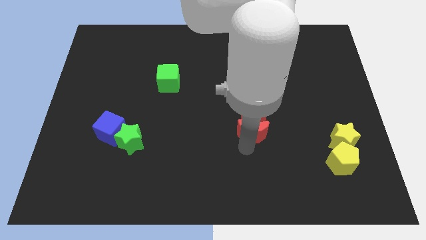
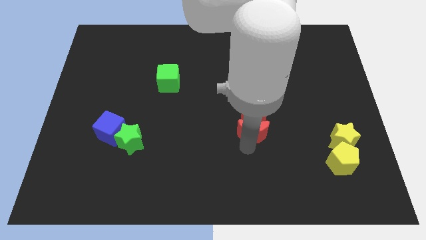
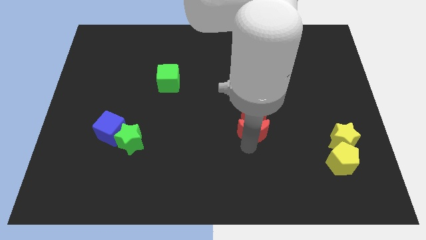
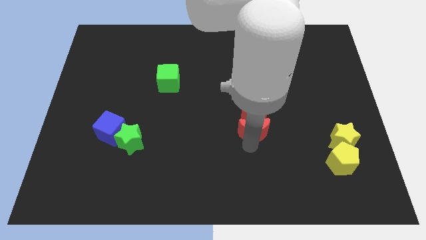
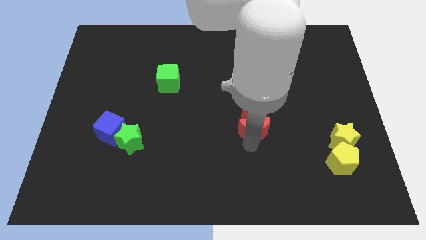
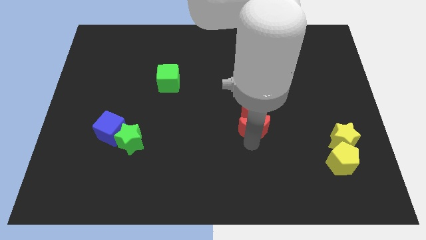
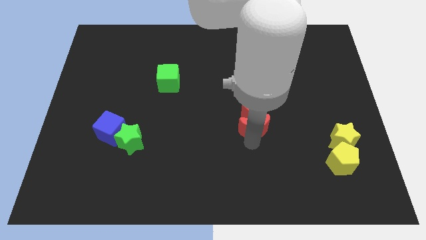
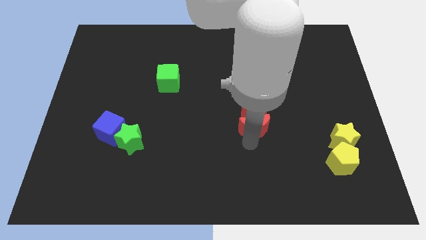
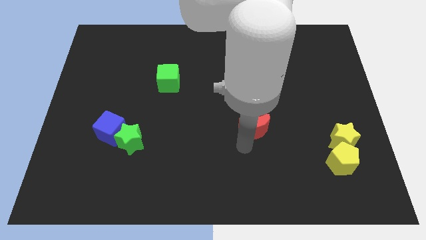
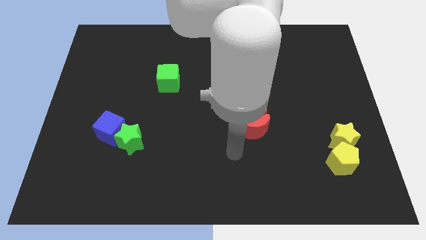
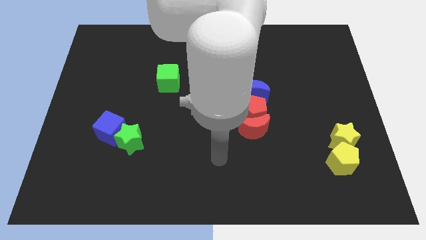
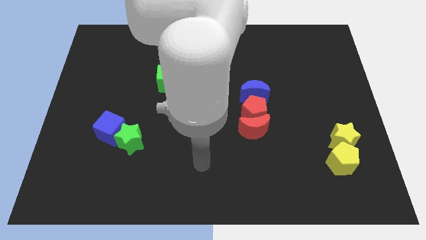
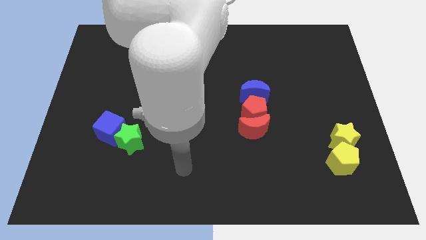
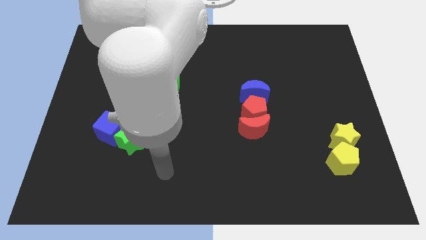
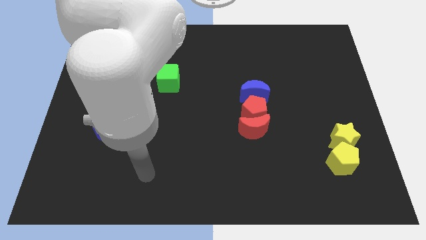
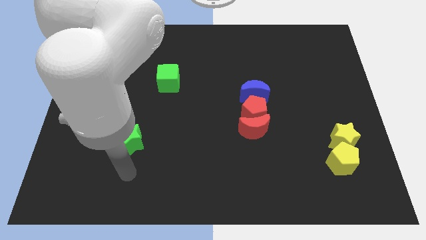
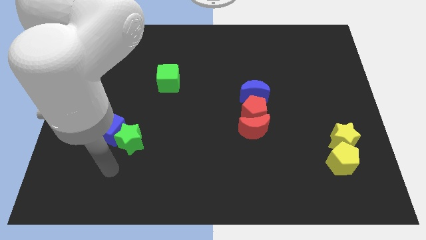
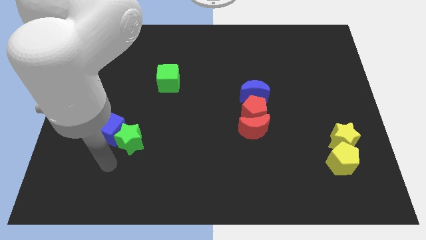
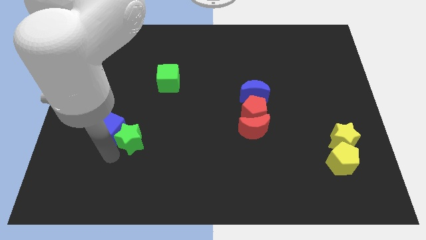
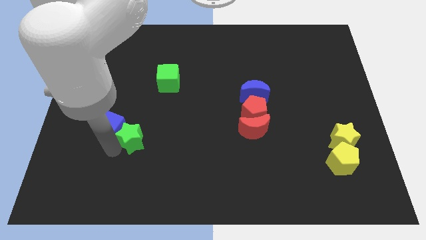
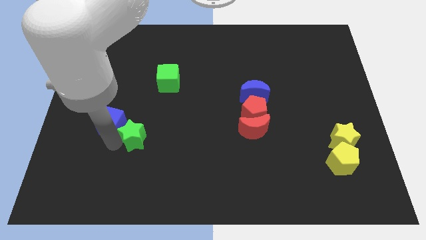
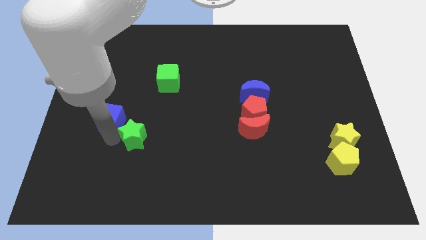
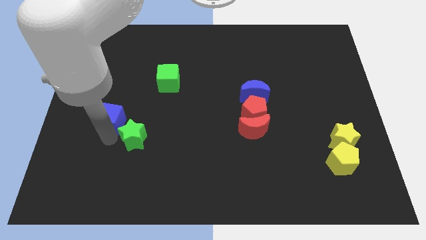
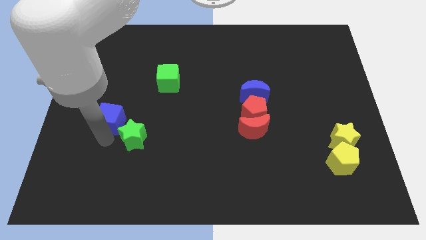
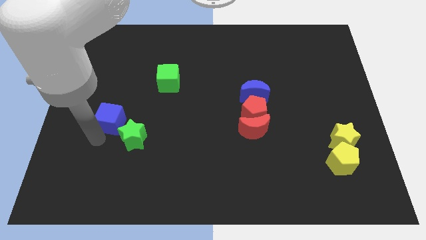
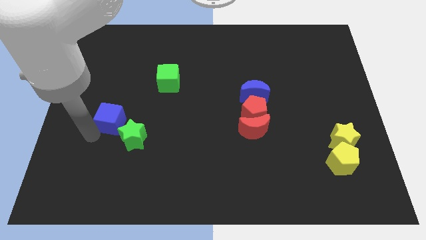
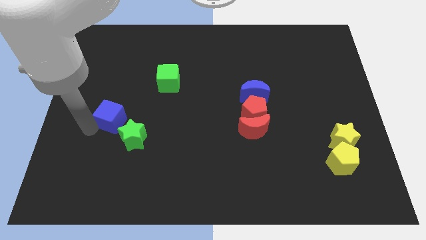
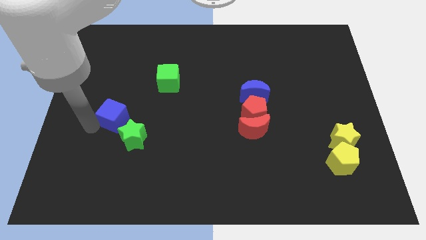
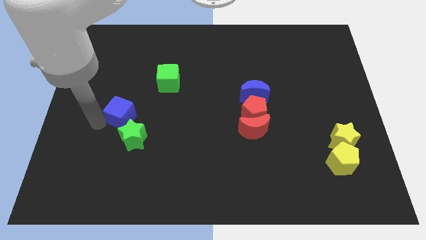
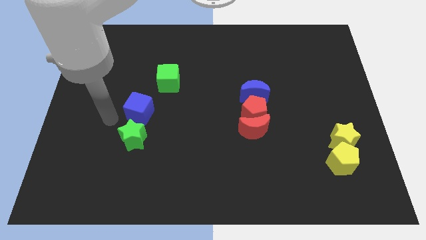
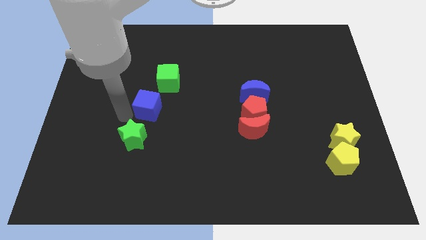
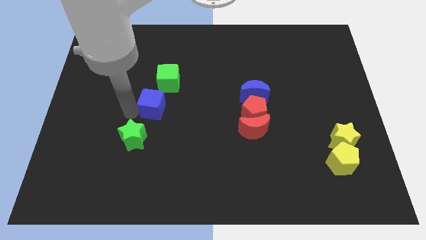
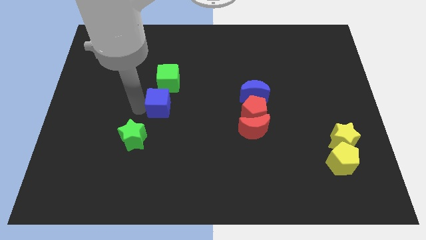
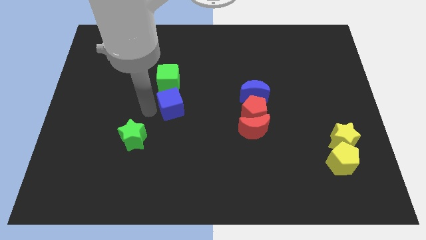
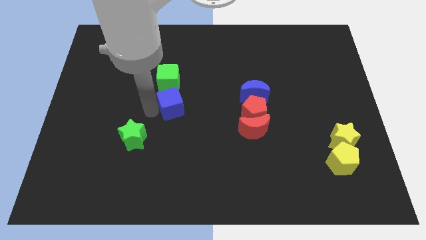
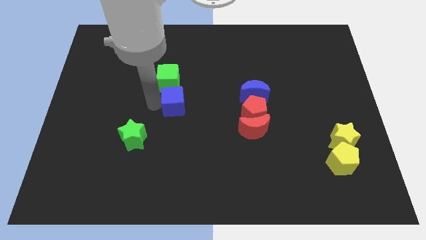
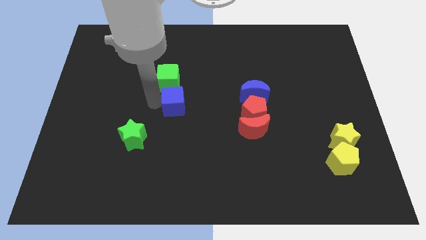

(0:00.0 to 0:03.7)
separate blue cube from the green star

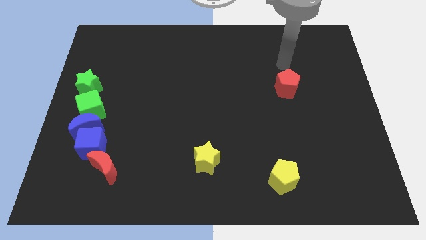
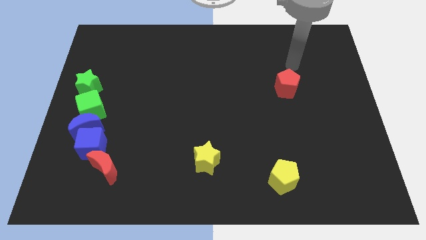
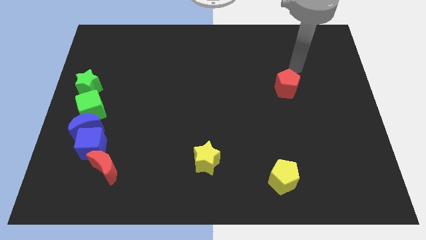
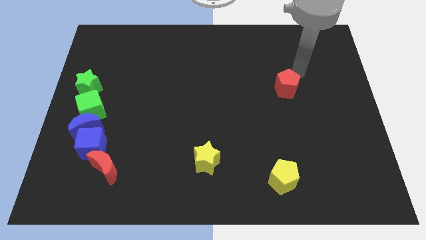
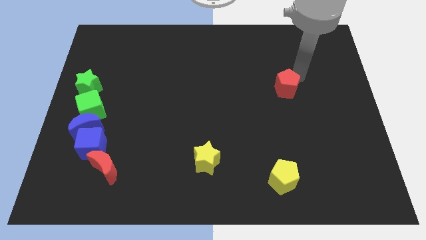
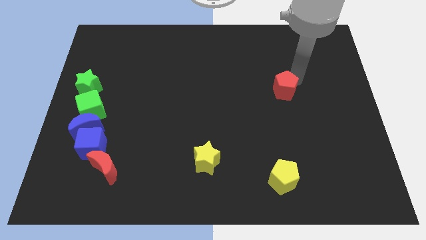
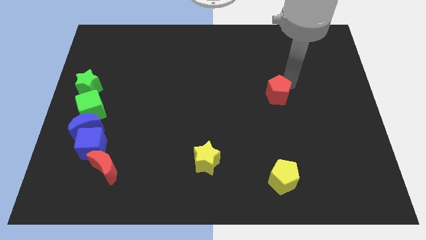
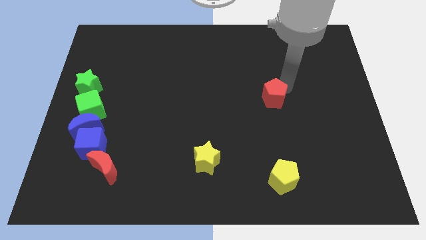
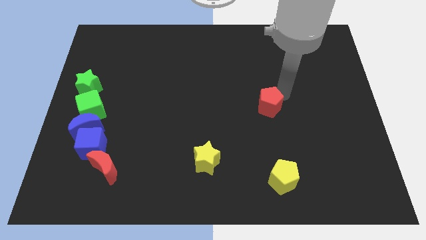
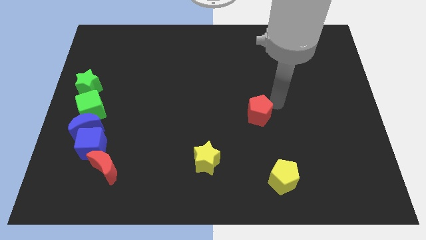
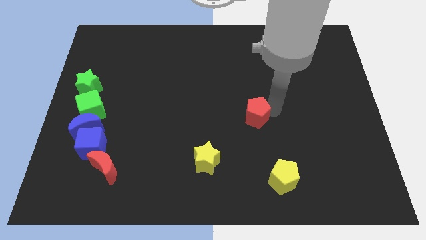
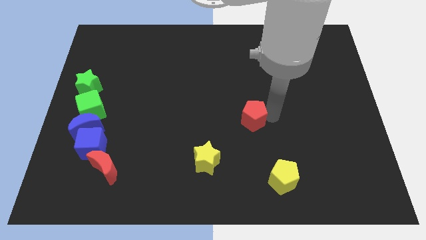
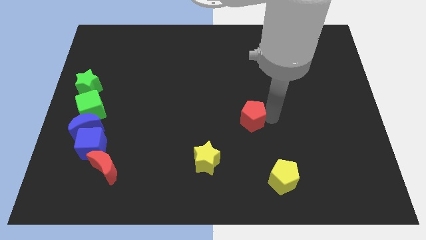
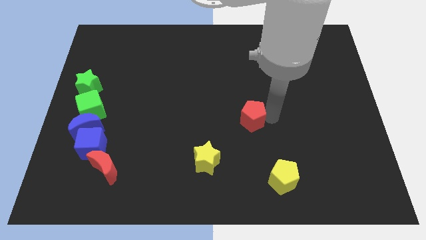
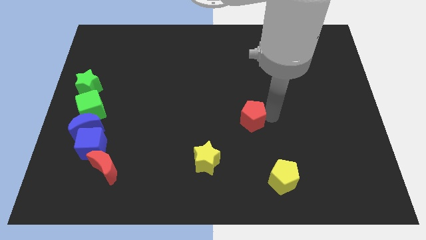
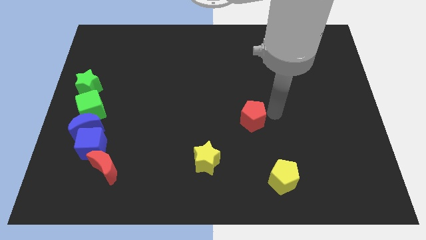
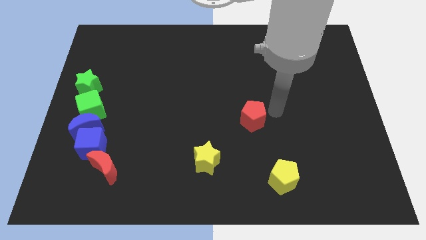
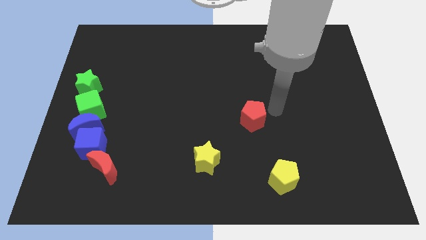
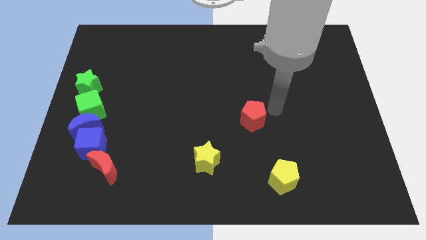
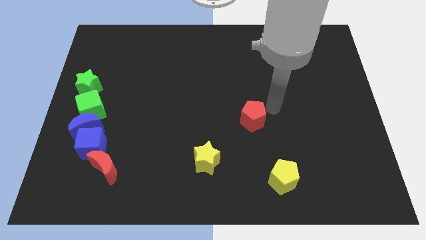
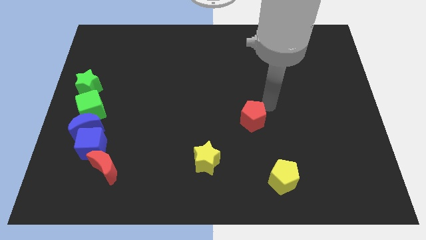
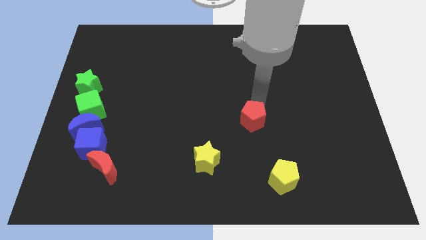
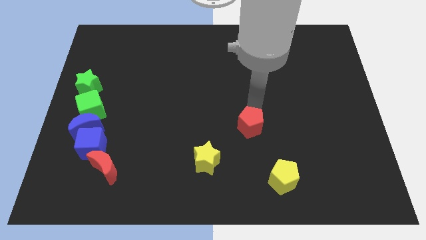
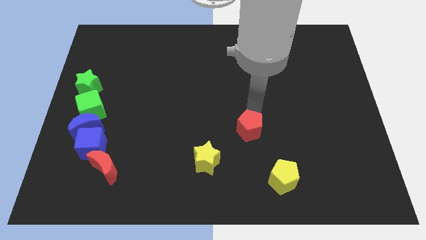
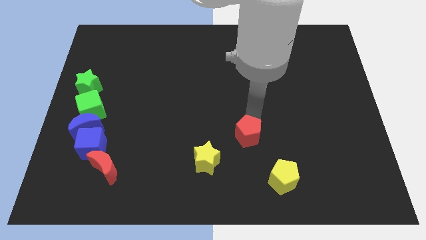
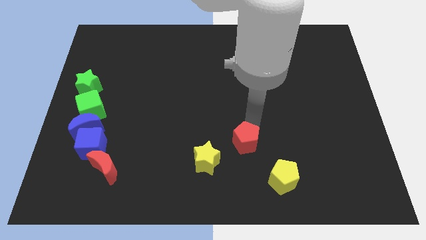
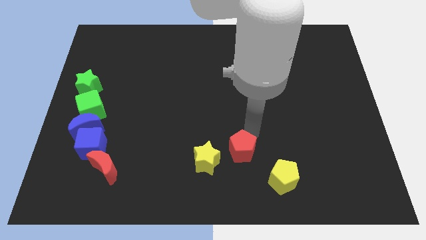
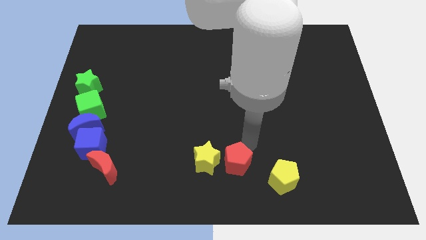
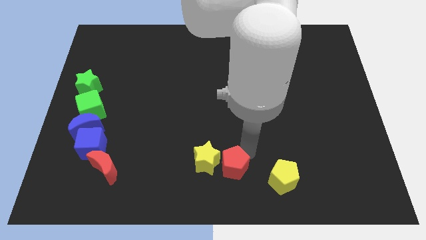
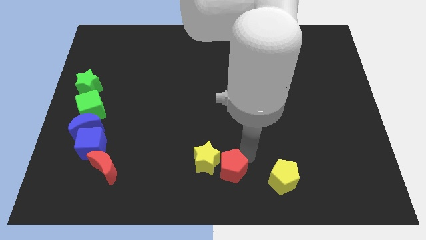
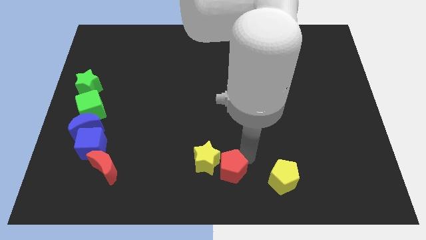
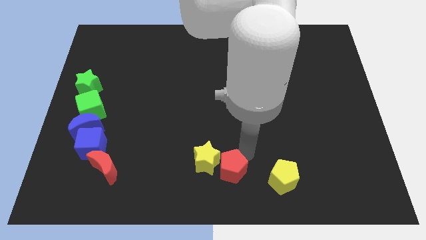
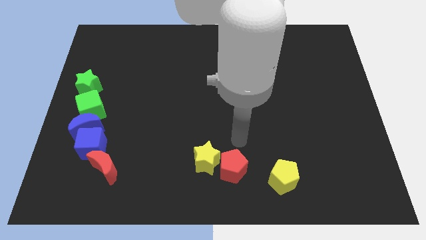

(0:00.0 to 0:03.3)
place the red pentagon to the right of the yellow star

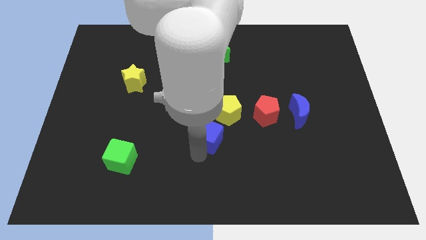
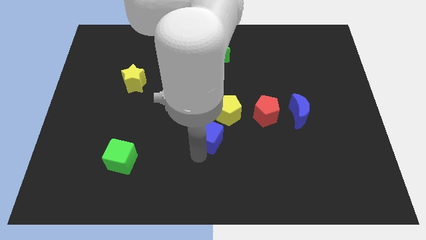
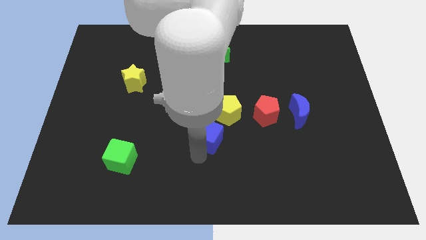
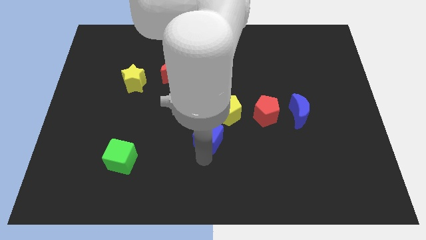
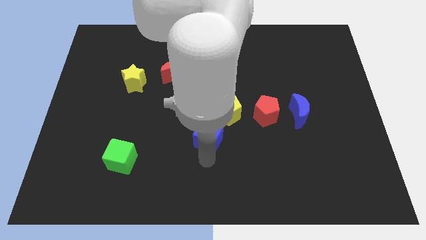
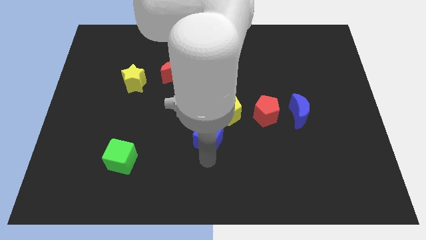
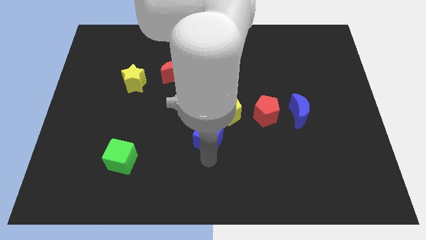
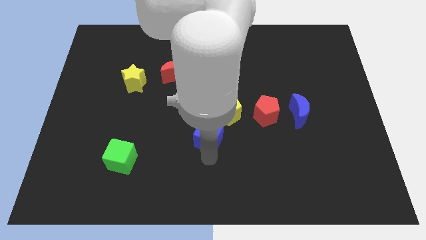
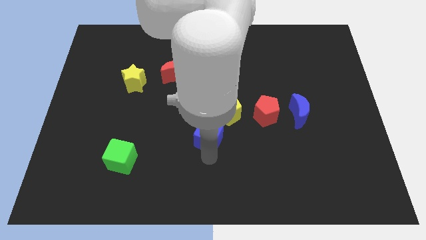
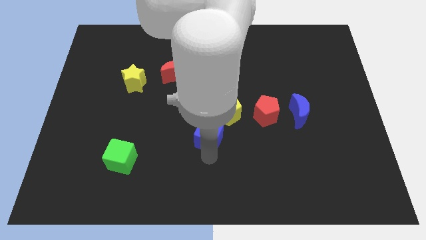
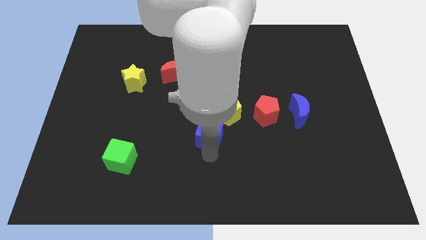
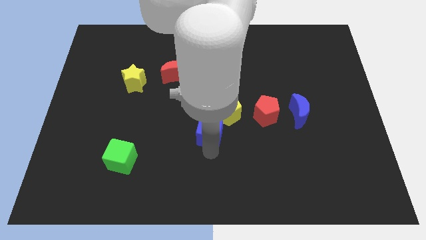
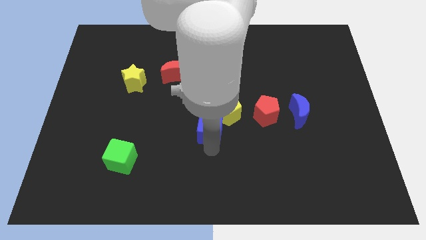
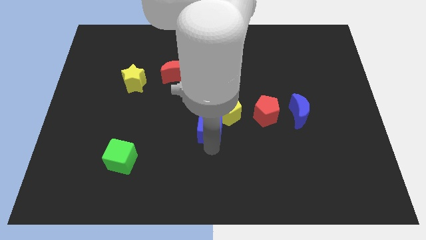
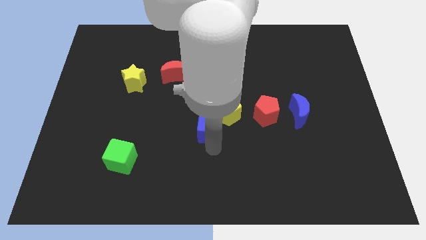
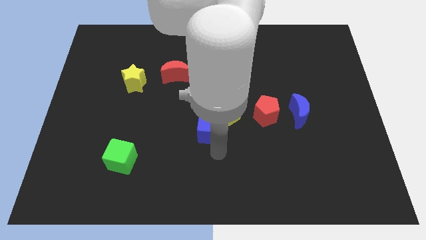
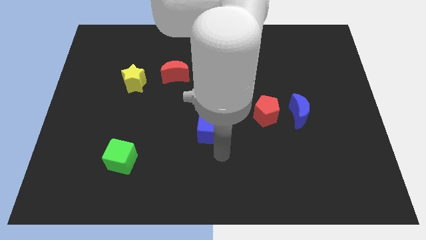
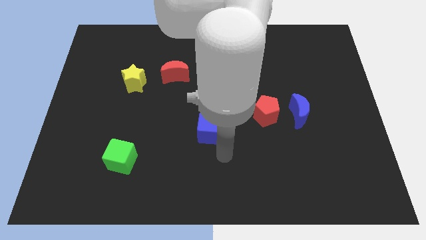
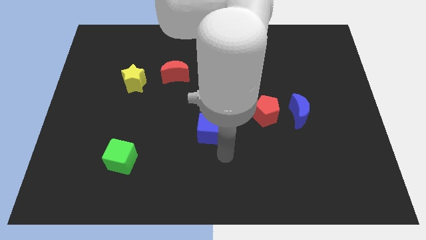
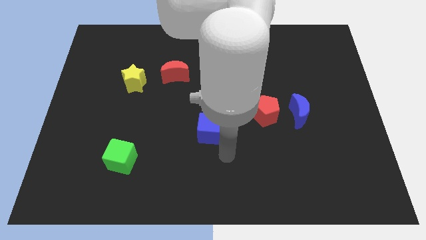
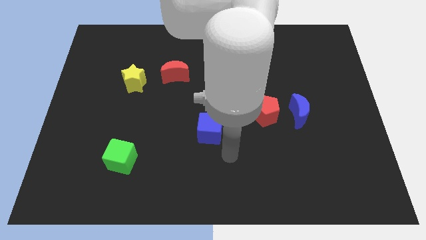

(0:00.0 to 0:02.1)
place the blue crescent into the yellow pentagon
